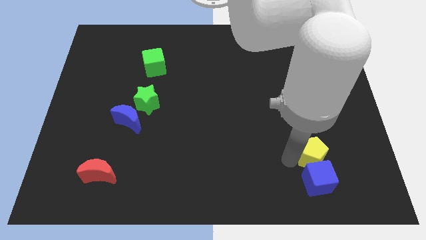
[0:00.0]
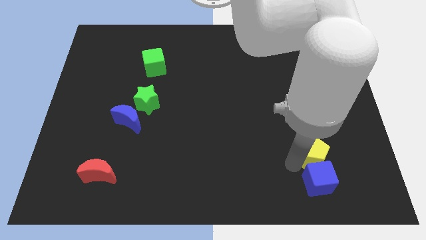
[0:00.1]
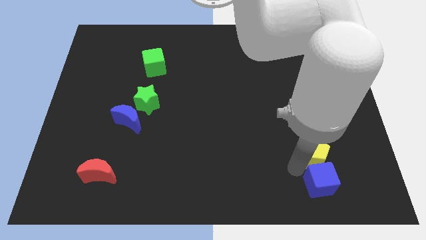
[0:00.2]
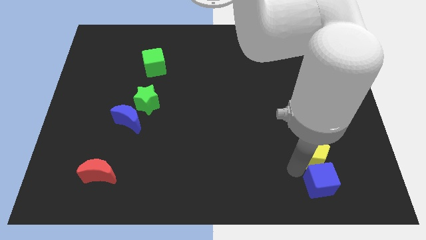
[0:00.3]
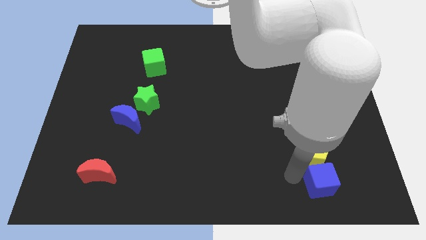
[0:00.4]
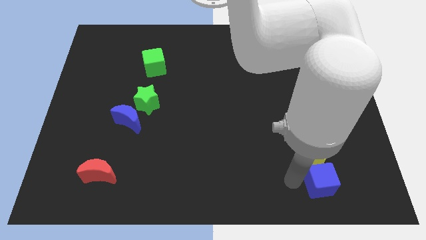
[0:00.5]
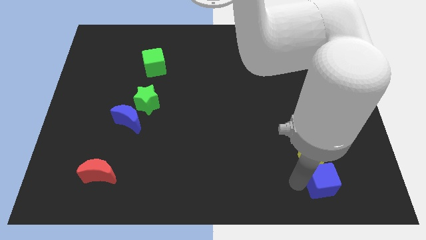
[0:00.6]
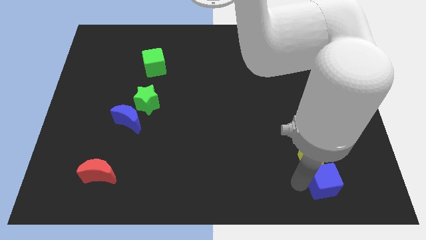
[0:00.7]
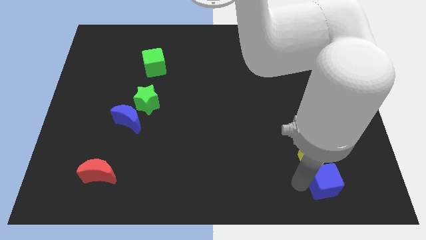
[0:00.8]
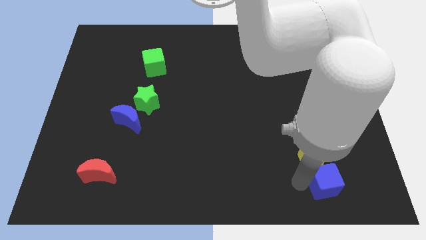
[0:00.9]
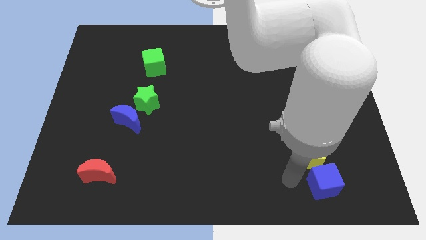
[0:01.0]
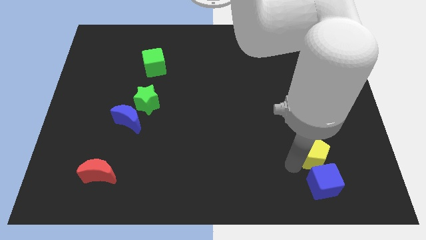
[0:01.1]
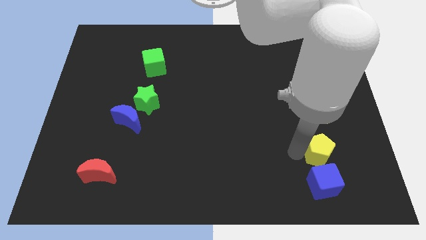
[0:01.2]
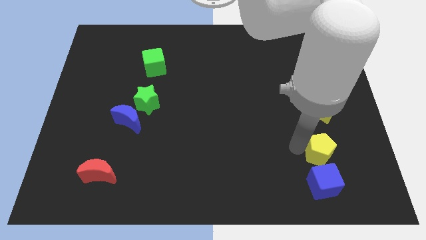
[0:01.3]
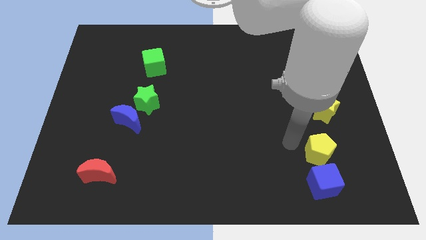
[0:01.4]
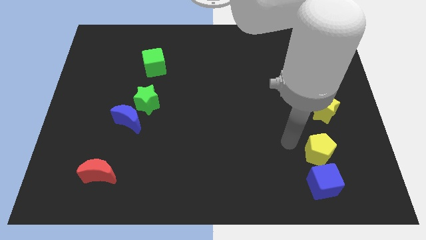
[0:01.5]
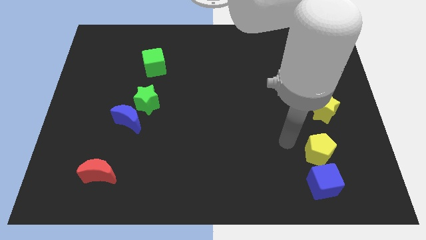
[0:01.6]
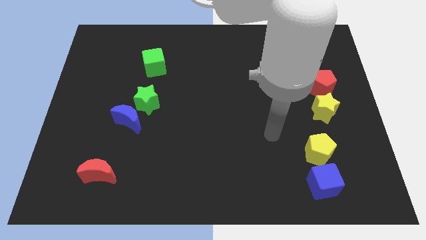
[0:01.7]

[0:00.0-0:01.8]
place the yellow pentagon and blue cube vertical to each other

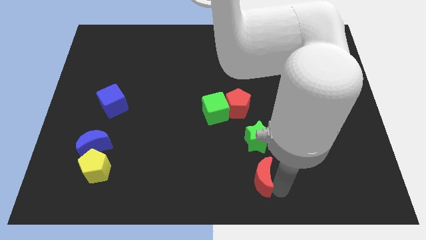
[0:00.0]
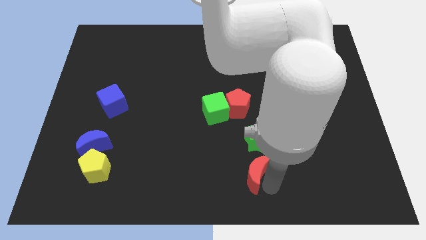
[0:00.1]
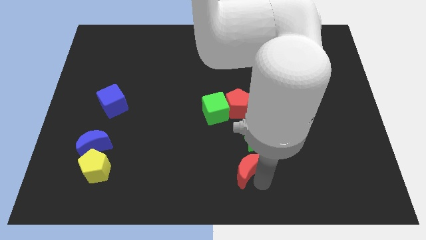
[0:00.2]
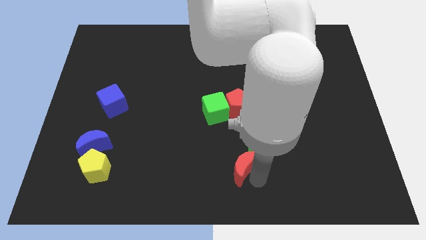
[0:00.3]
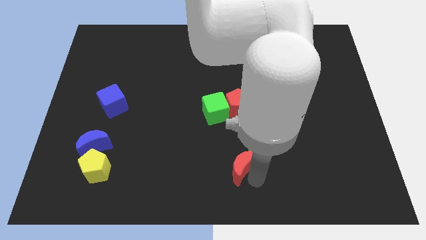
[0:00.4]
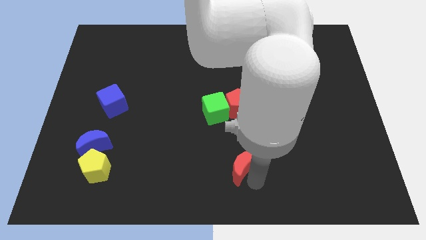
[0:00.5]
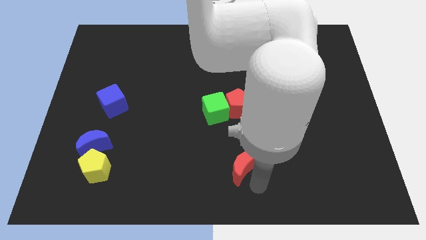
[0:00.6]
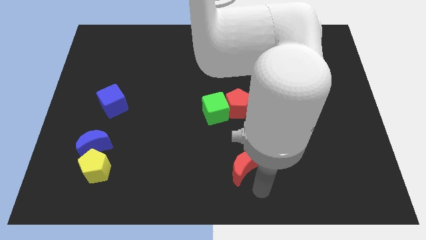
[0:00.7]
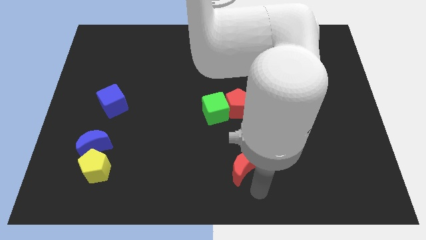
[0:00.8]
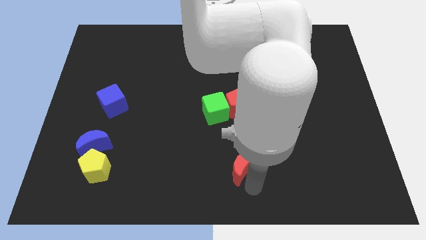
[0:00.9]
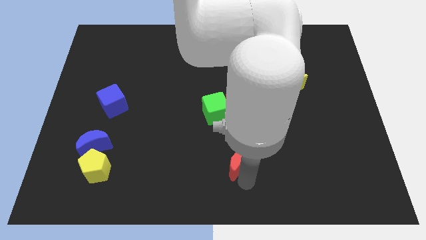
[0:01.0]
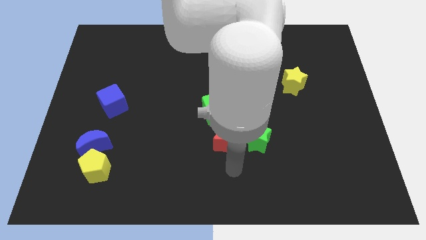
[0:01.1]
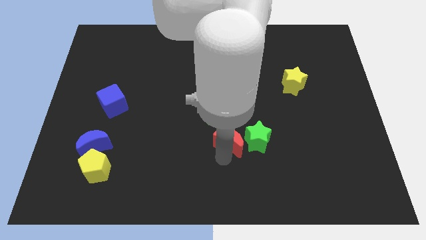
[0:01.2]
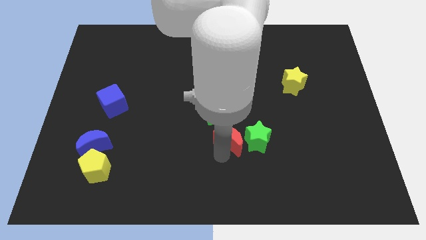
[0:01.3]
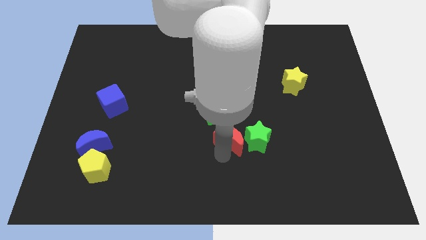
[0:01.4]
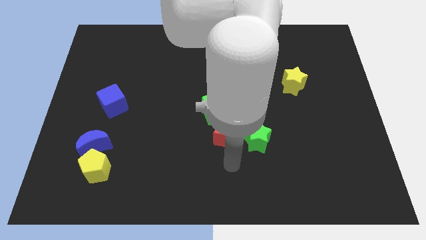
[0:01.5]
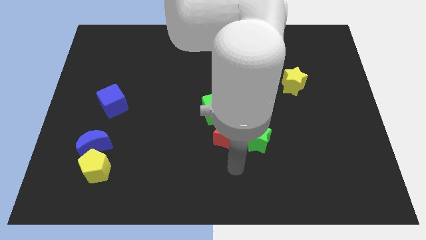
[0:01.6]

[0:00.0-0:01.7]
move the red moon to the left of the green star

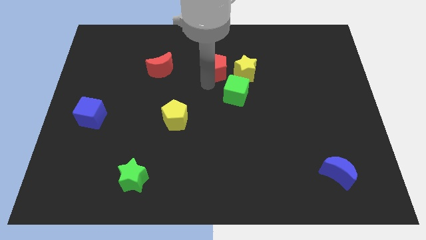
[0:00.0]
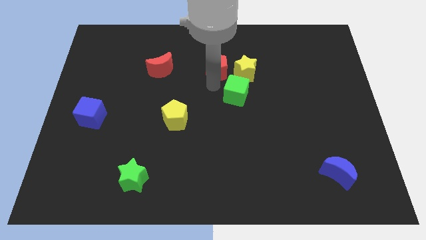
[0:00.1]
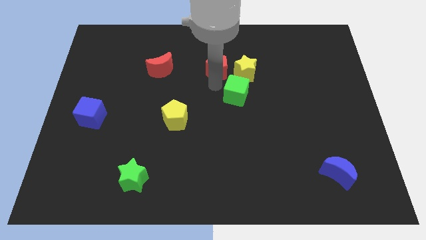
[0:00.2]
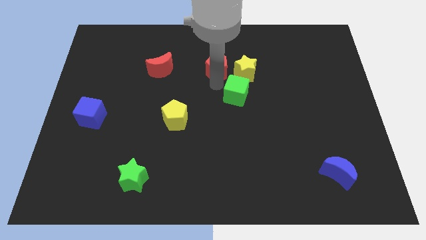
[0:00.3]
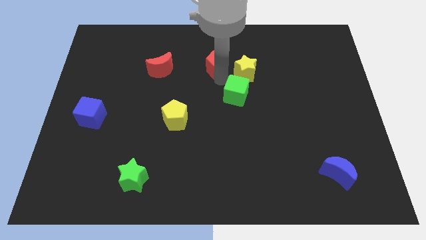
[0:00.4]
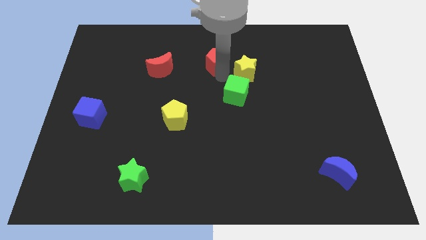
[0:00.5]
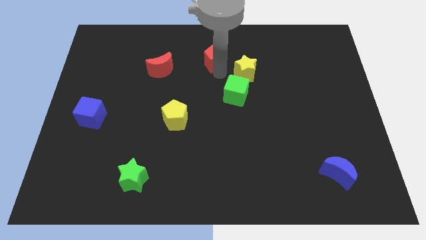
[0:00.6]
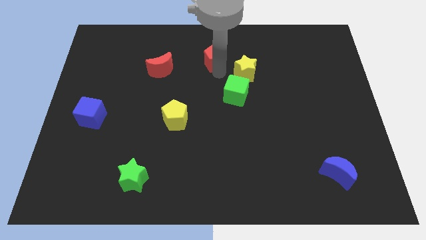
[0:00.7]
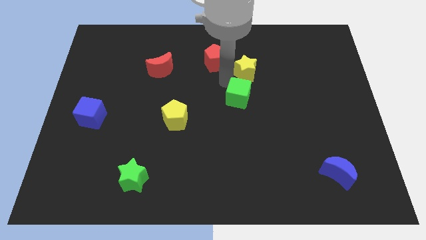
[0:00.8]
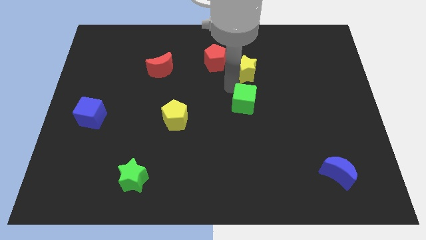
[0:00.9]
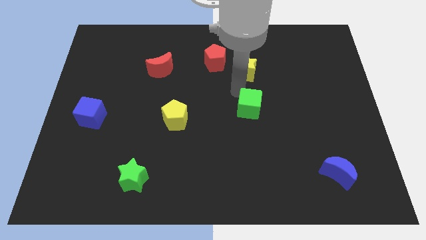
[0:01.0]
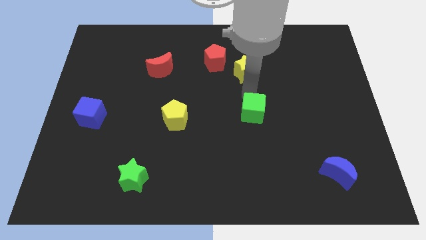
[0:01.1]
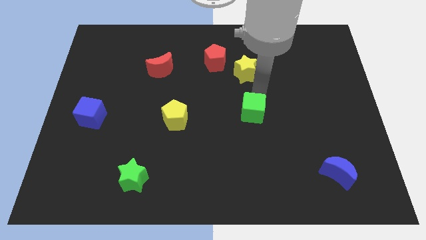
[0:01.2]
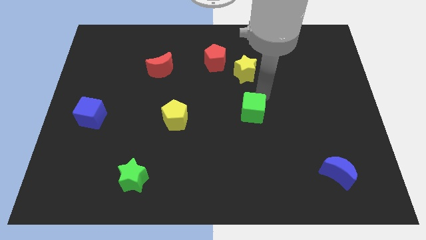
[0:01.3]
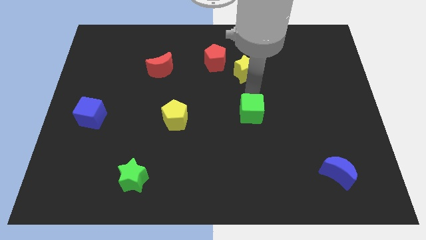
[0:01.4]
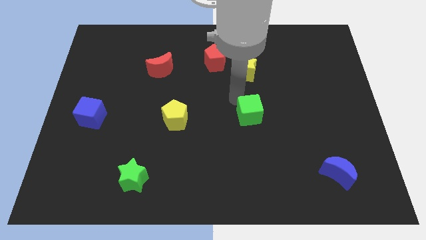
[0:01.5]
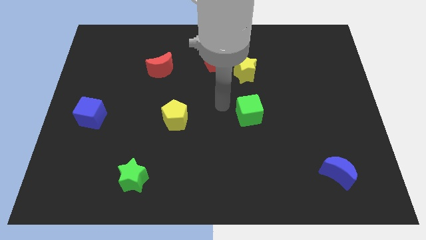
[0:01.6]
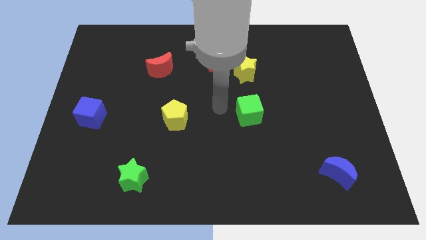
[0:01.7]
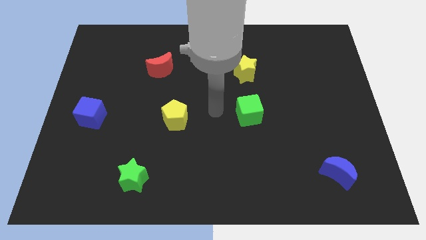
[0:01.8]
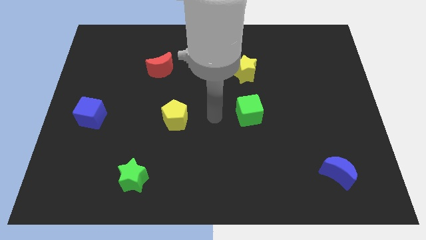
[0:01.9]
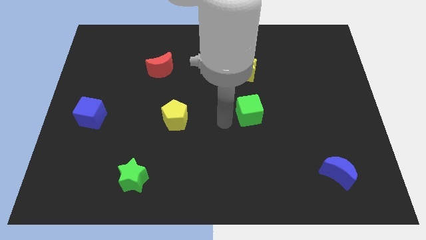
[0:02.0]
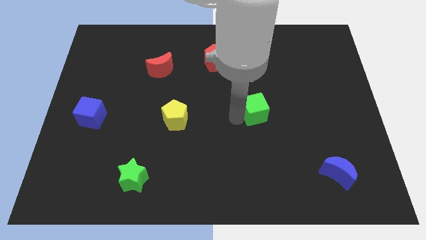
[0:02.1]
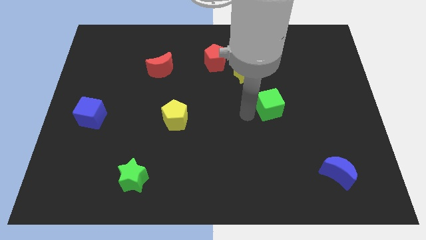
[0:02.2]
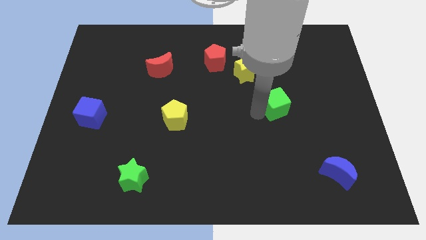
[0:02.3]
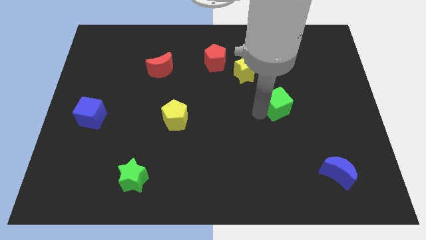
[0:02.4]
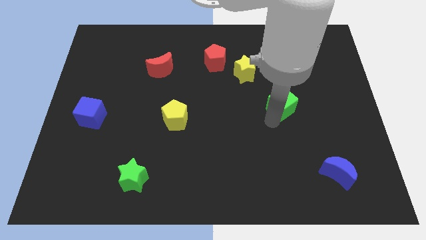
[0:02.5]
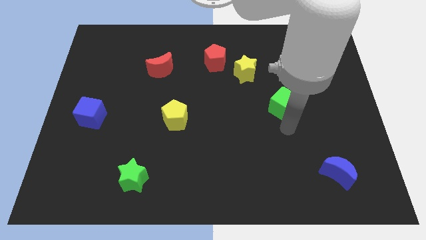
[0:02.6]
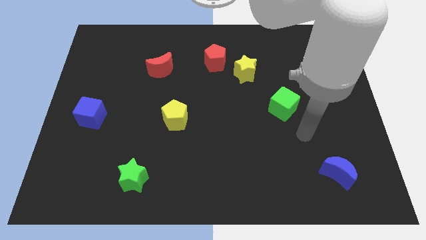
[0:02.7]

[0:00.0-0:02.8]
move green cube to the right of the board

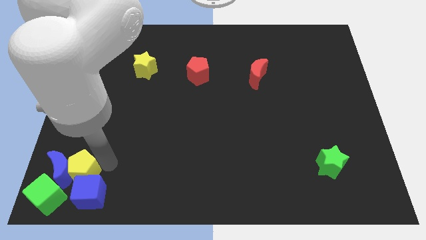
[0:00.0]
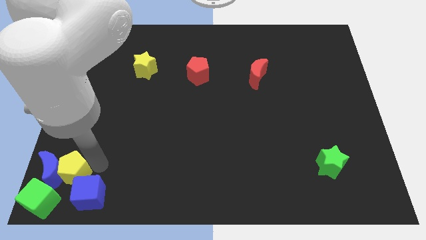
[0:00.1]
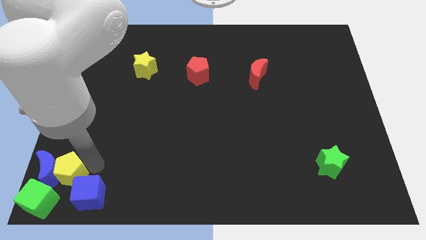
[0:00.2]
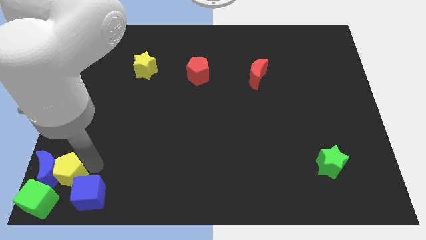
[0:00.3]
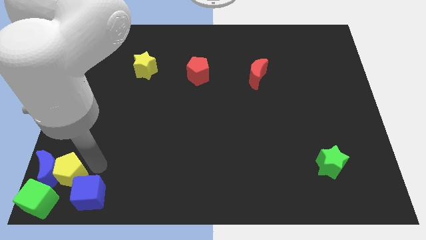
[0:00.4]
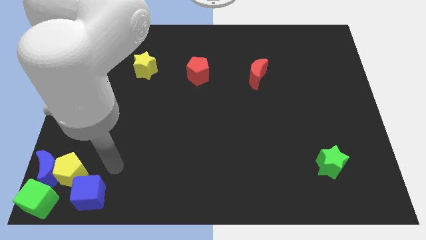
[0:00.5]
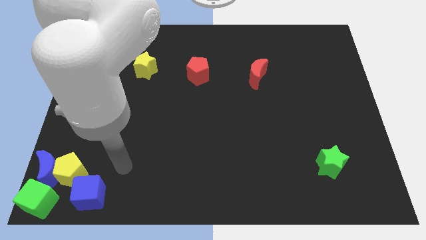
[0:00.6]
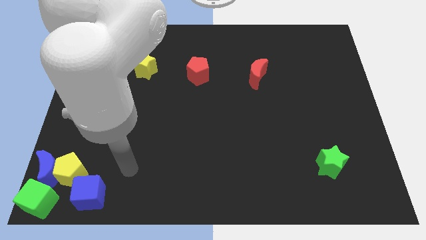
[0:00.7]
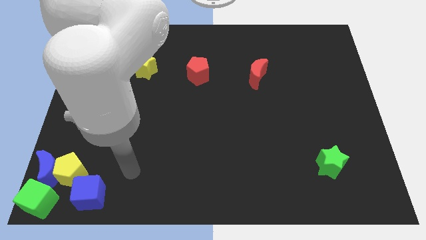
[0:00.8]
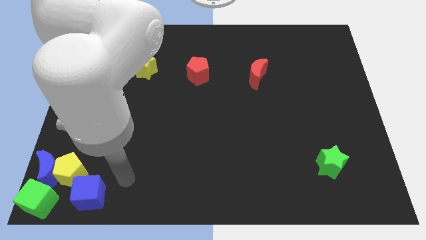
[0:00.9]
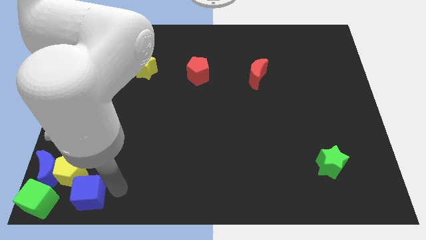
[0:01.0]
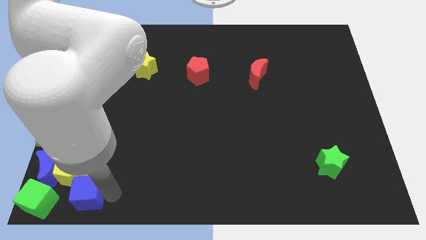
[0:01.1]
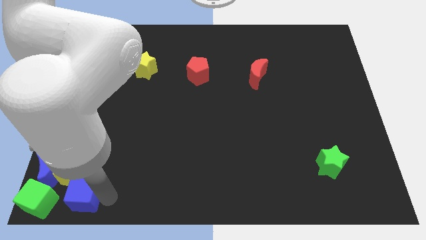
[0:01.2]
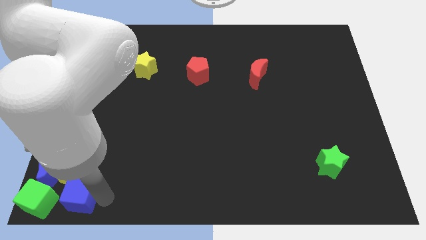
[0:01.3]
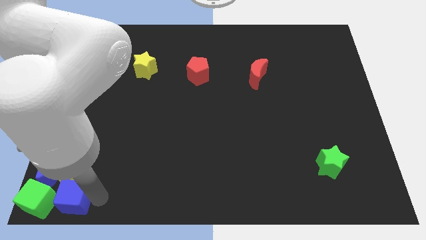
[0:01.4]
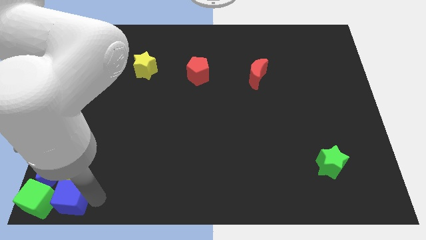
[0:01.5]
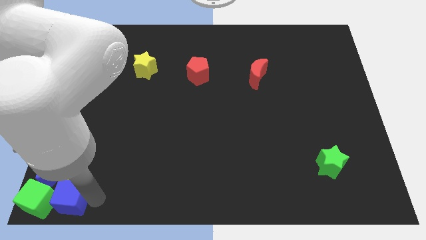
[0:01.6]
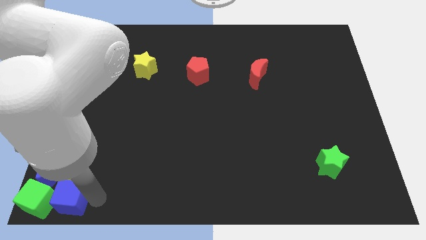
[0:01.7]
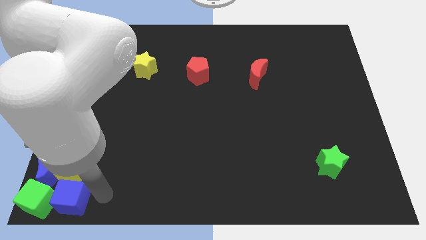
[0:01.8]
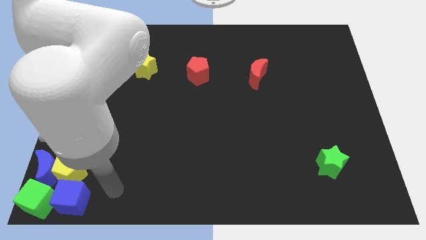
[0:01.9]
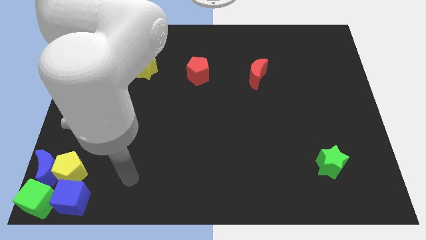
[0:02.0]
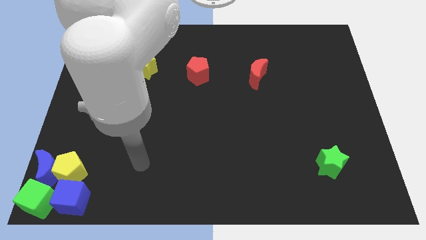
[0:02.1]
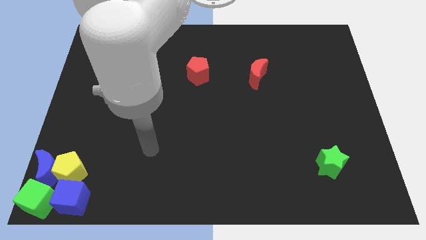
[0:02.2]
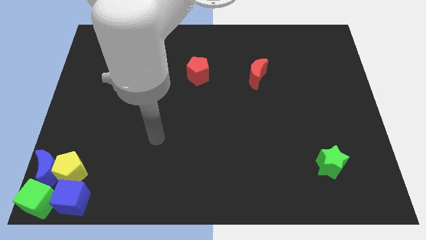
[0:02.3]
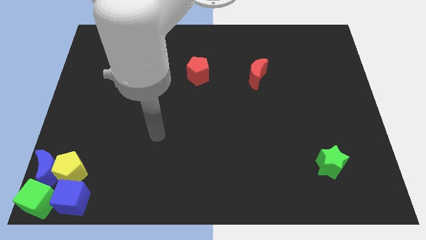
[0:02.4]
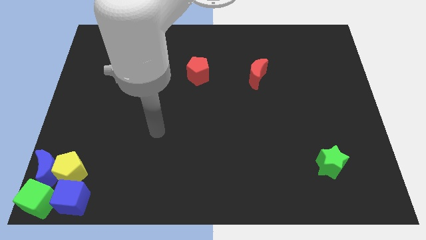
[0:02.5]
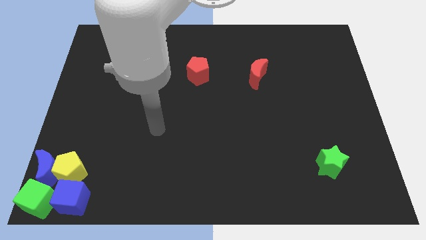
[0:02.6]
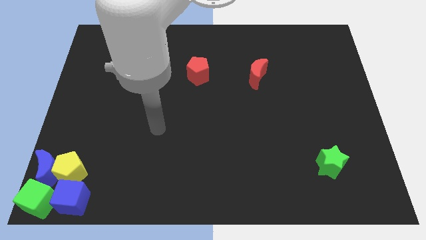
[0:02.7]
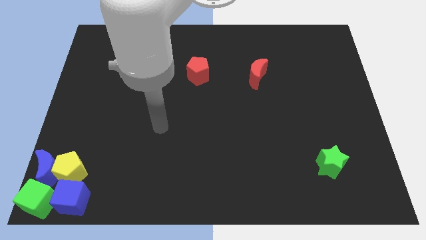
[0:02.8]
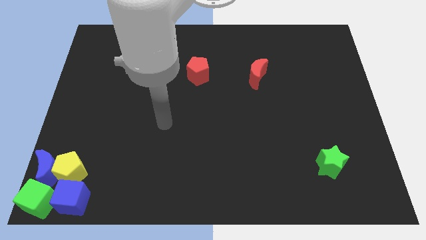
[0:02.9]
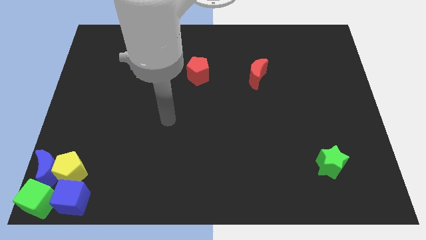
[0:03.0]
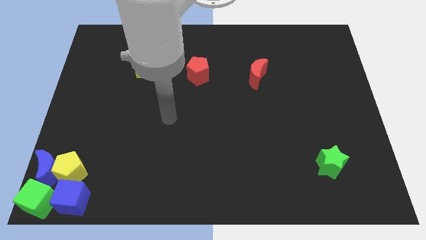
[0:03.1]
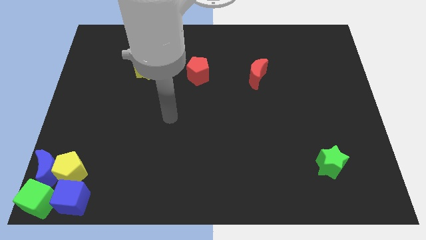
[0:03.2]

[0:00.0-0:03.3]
move the blue cube below the yellow pentagon
